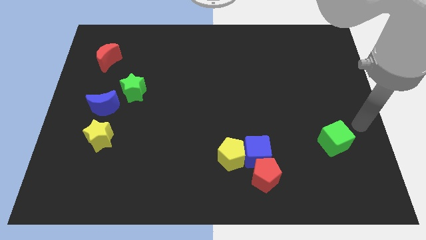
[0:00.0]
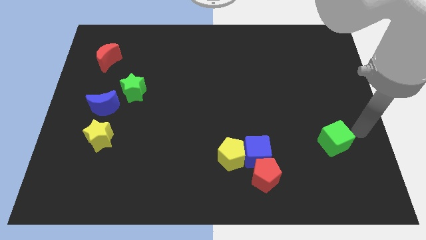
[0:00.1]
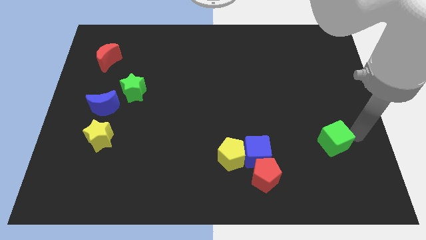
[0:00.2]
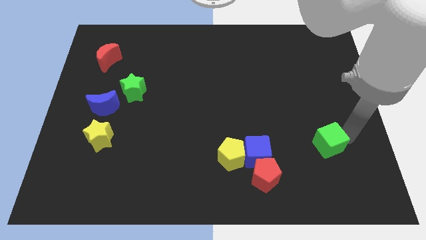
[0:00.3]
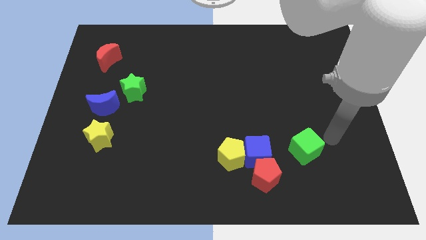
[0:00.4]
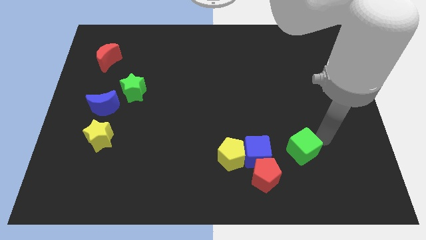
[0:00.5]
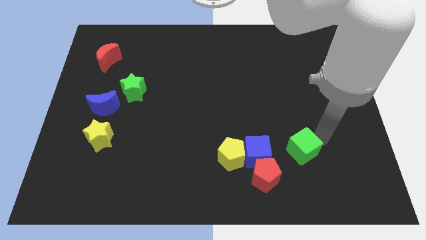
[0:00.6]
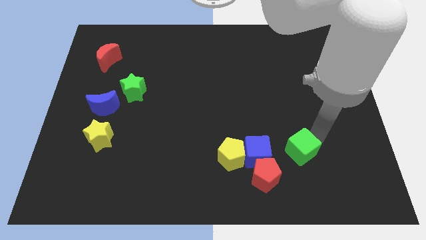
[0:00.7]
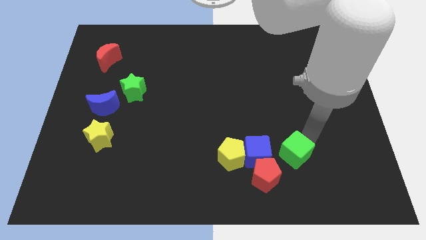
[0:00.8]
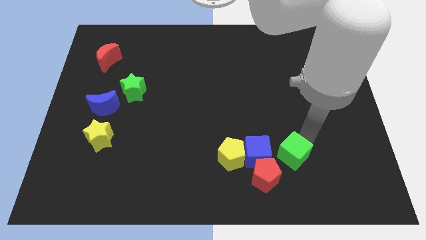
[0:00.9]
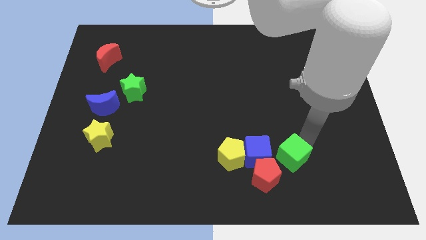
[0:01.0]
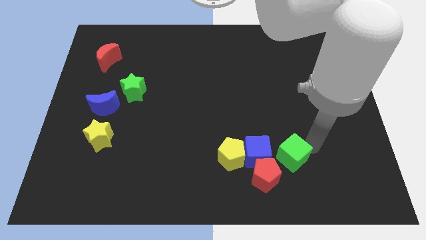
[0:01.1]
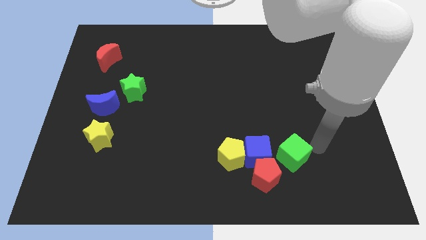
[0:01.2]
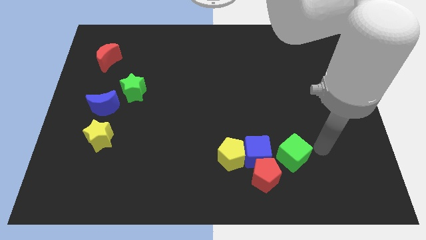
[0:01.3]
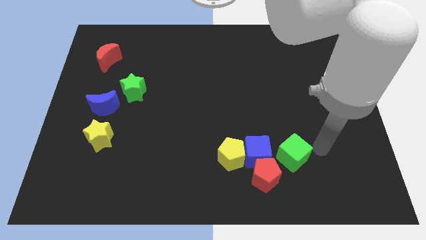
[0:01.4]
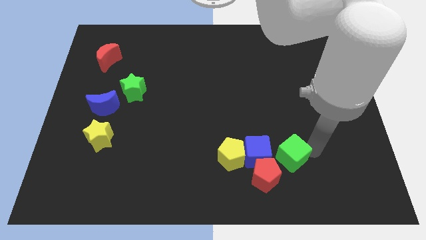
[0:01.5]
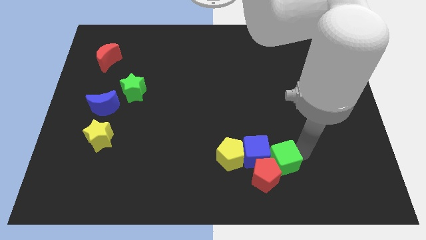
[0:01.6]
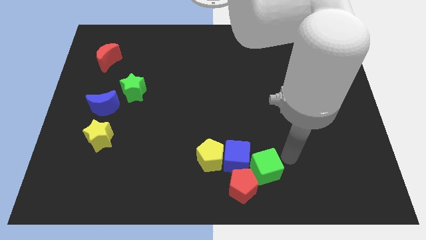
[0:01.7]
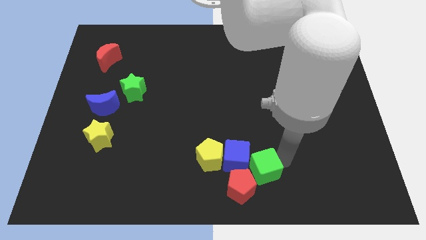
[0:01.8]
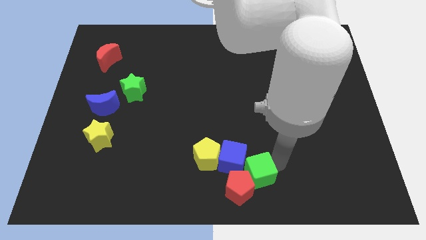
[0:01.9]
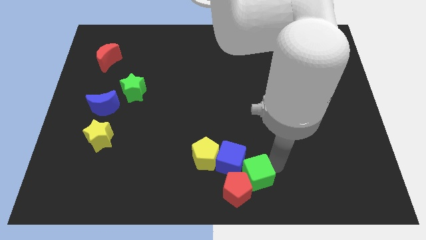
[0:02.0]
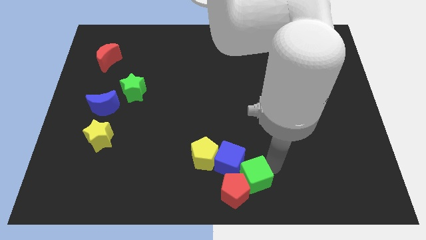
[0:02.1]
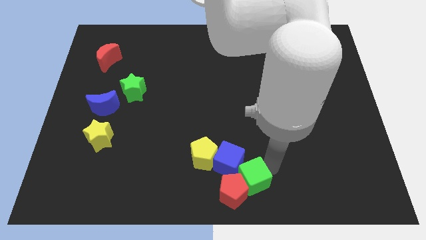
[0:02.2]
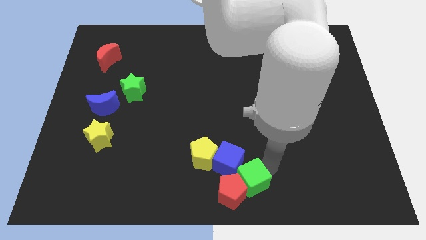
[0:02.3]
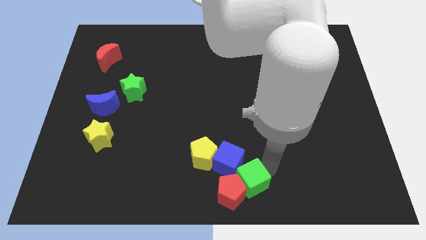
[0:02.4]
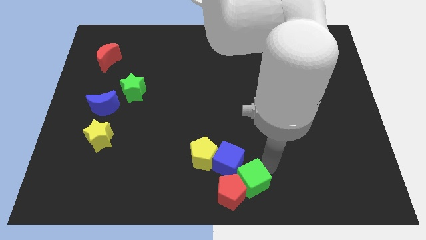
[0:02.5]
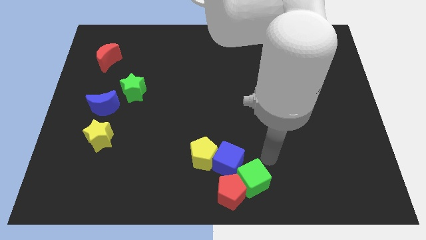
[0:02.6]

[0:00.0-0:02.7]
move green cube into the top right of red pentagon

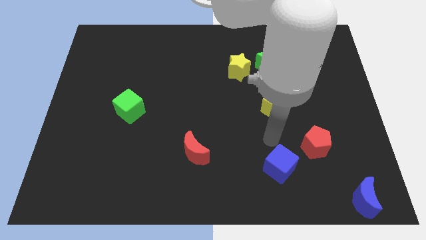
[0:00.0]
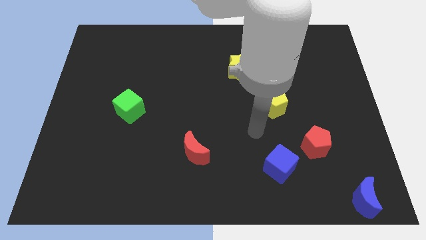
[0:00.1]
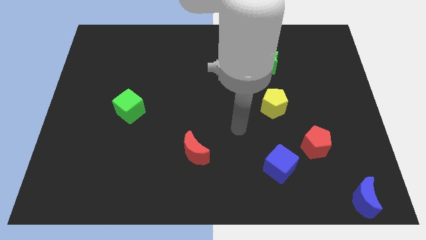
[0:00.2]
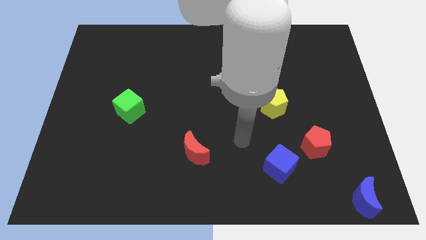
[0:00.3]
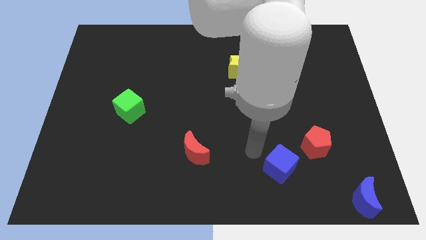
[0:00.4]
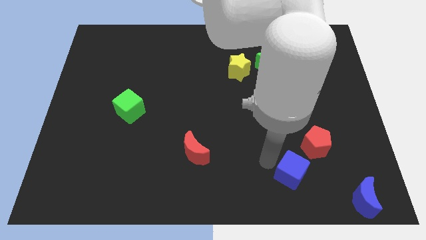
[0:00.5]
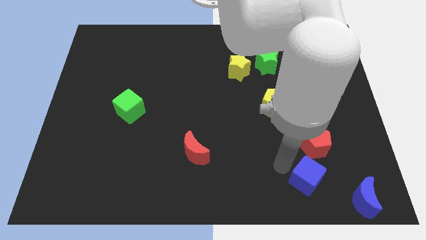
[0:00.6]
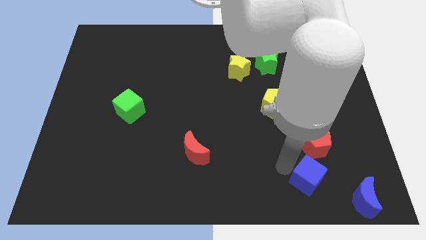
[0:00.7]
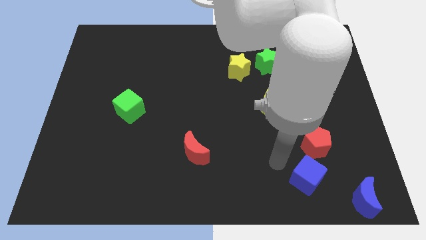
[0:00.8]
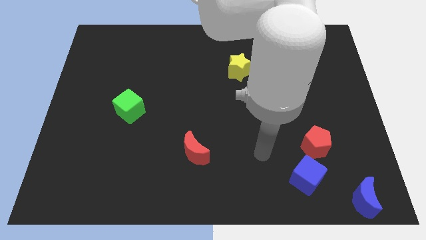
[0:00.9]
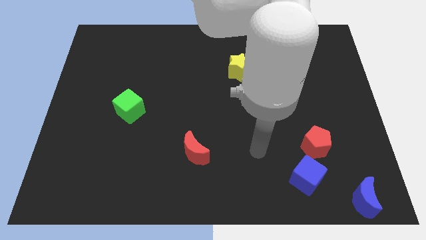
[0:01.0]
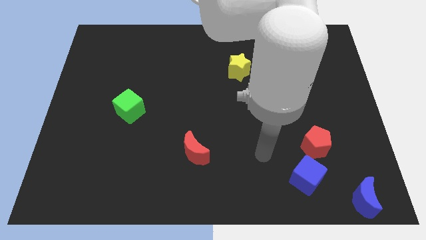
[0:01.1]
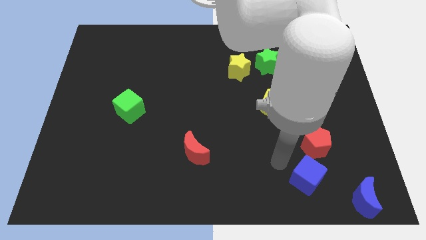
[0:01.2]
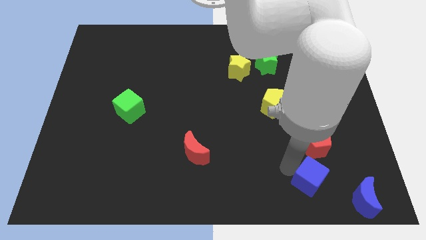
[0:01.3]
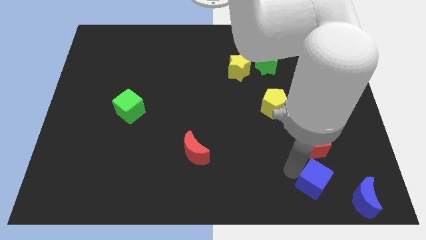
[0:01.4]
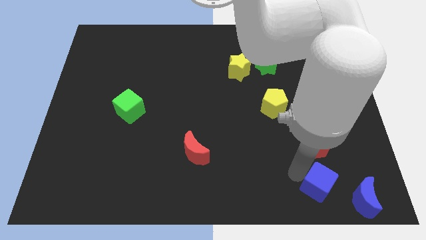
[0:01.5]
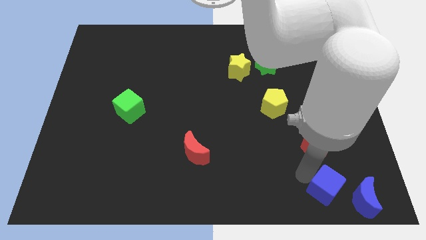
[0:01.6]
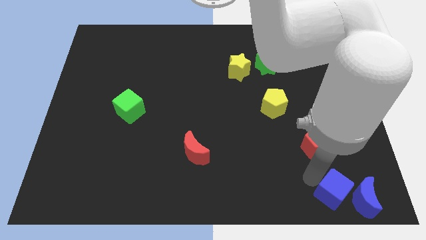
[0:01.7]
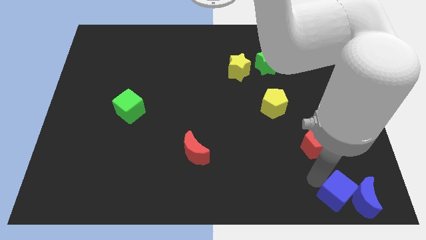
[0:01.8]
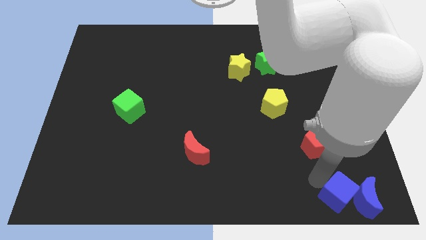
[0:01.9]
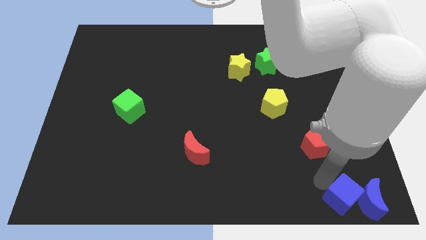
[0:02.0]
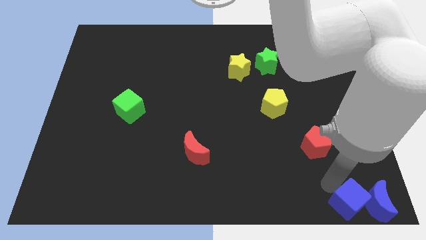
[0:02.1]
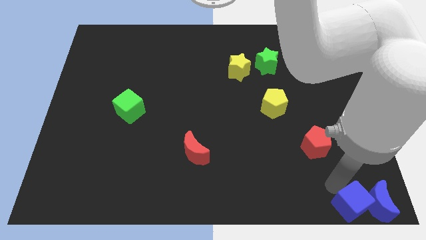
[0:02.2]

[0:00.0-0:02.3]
move the blue cube into the blue moon

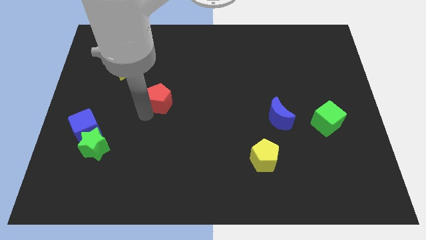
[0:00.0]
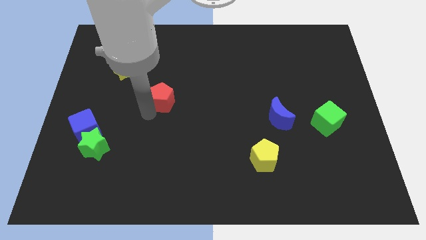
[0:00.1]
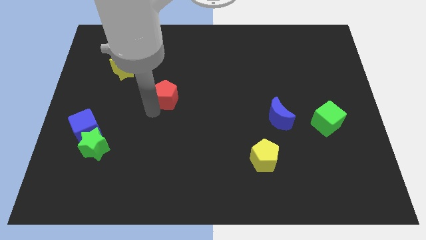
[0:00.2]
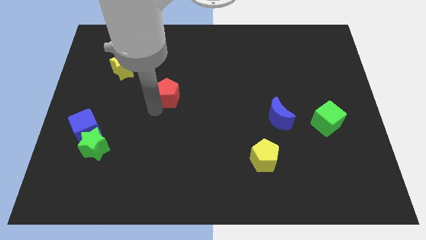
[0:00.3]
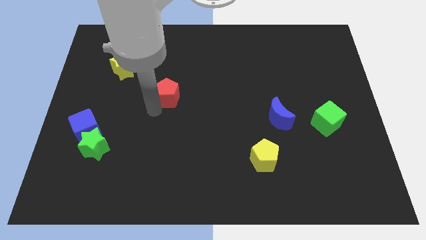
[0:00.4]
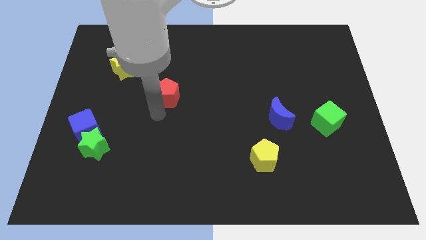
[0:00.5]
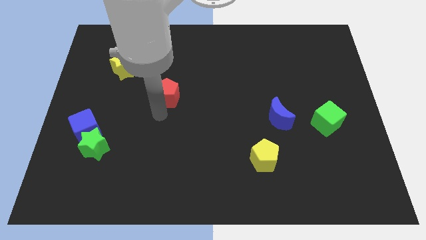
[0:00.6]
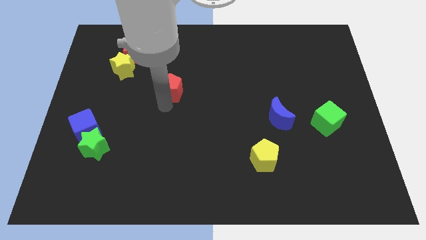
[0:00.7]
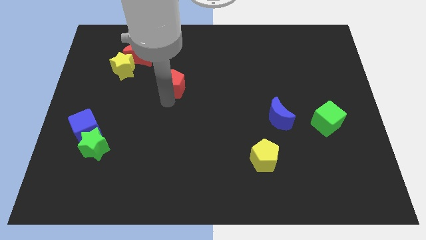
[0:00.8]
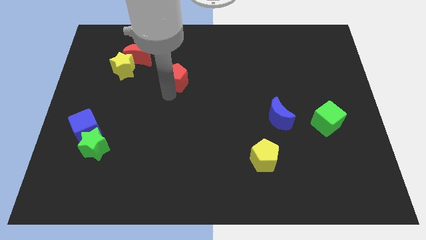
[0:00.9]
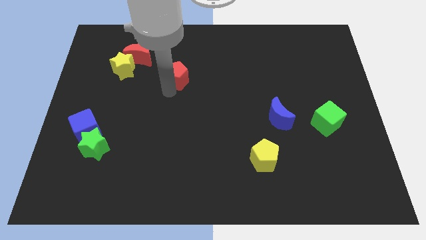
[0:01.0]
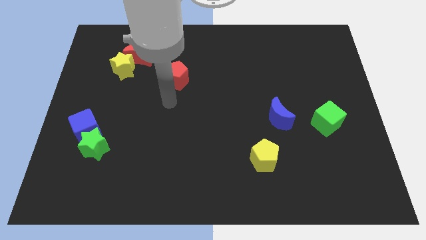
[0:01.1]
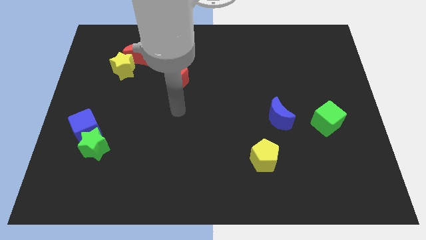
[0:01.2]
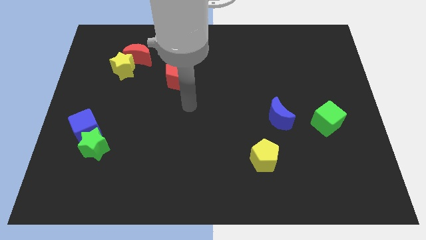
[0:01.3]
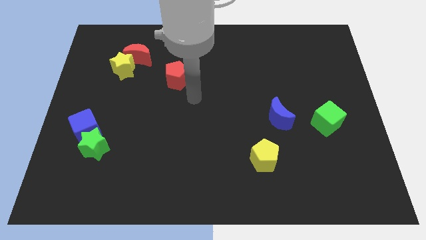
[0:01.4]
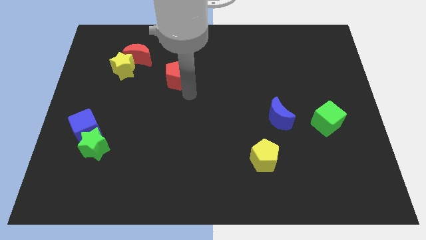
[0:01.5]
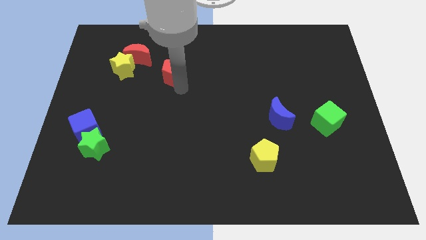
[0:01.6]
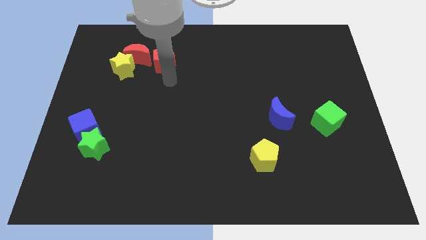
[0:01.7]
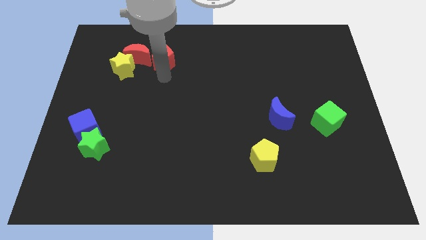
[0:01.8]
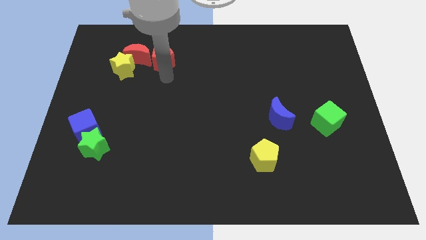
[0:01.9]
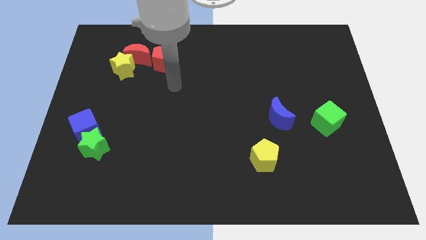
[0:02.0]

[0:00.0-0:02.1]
put the red pentagon right to the red moon

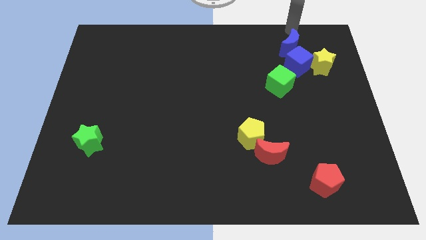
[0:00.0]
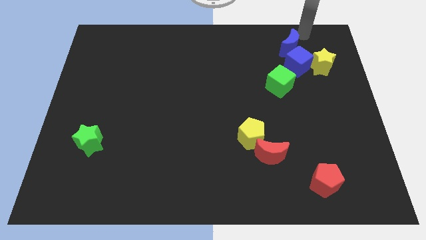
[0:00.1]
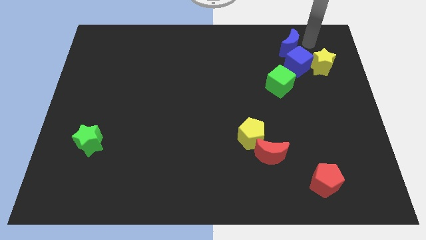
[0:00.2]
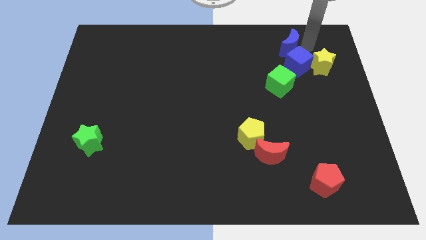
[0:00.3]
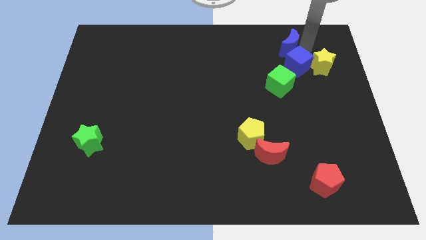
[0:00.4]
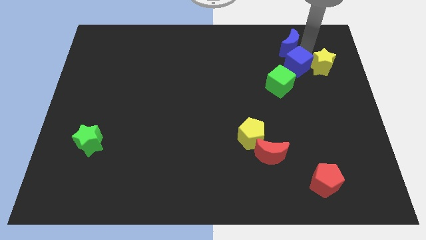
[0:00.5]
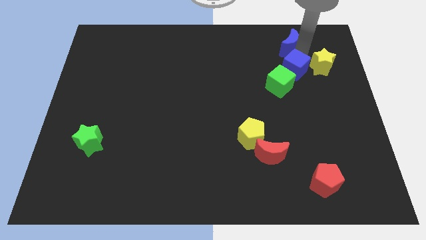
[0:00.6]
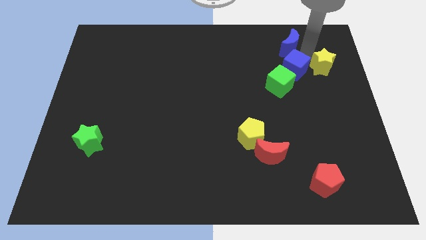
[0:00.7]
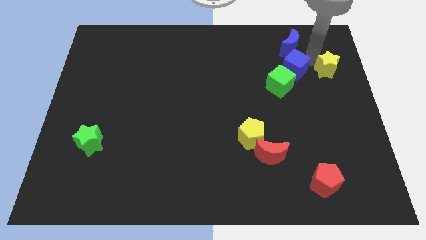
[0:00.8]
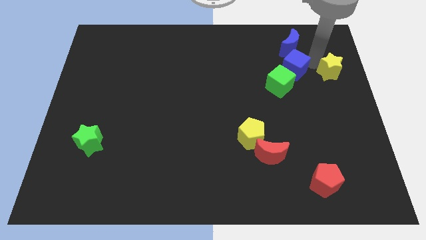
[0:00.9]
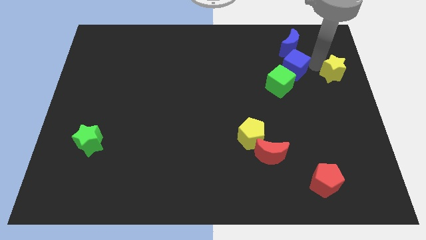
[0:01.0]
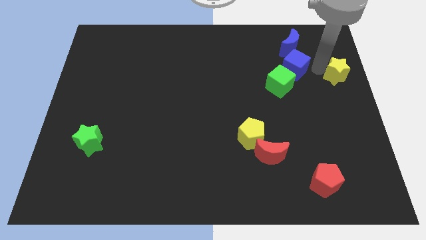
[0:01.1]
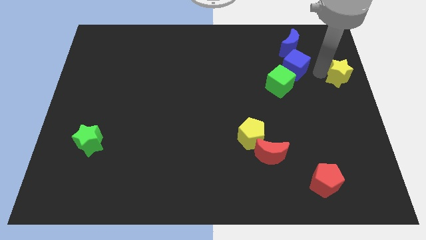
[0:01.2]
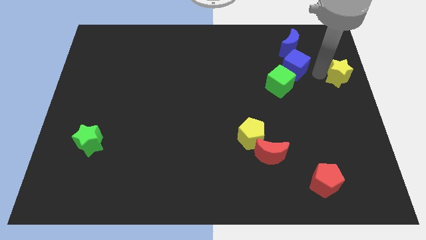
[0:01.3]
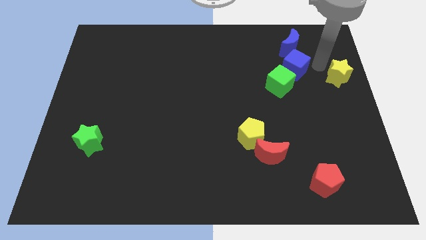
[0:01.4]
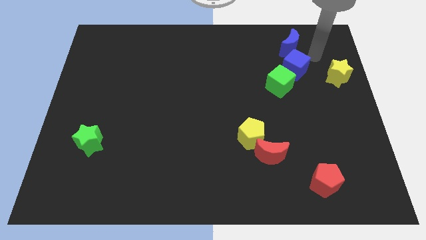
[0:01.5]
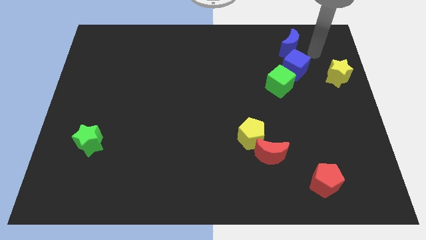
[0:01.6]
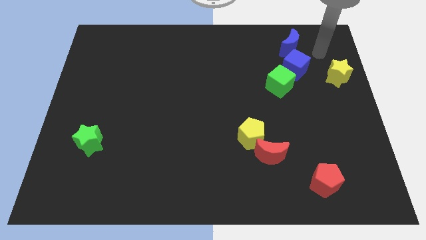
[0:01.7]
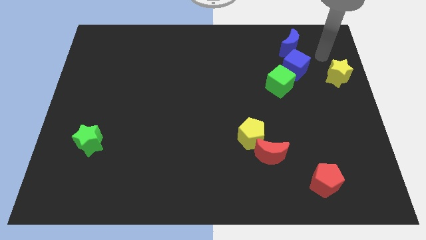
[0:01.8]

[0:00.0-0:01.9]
push the yellow star towards right center of the board
